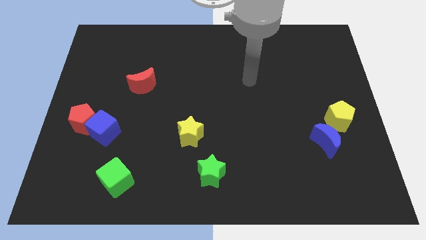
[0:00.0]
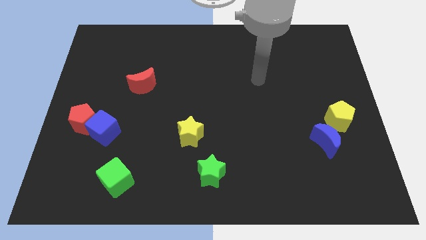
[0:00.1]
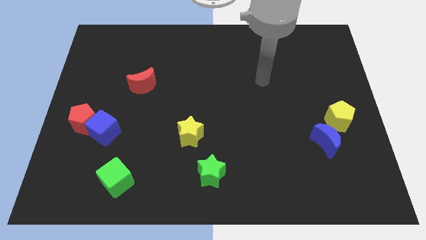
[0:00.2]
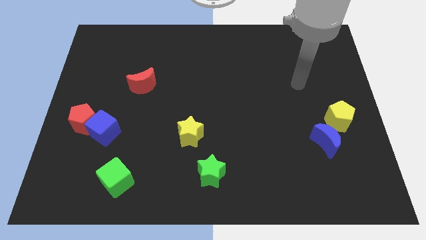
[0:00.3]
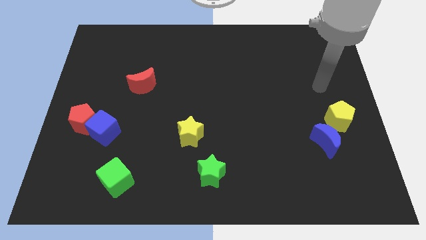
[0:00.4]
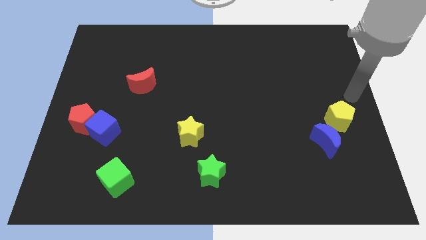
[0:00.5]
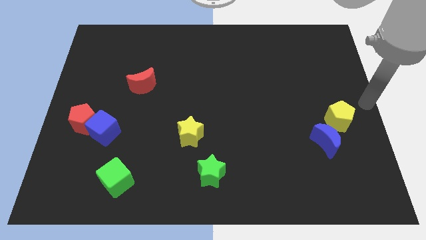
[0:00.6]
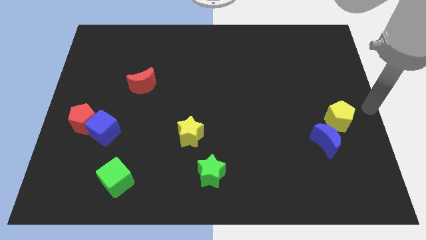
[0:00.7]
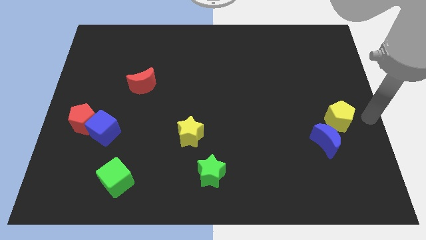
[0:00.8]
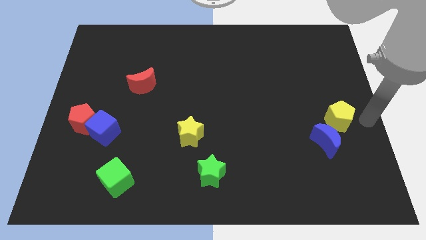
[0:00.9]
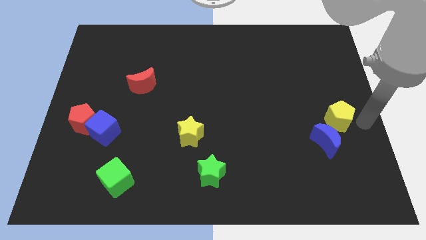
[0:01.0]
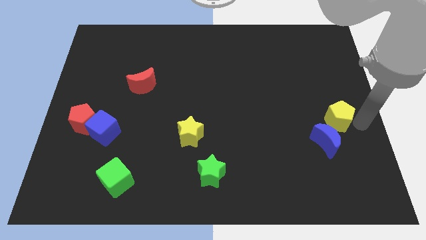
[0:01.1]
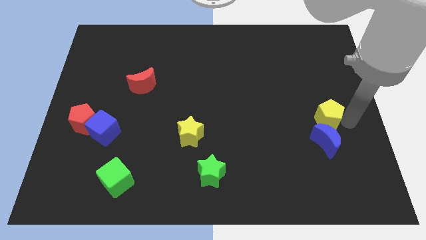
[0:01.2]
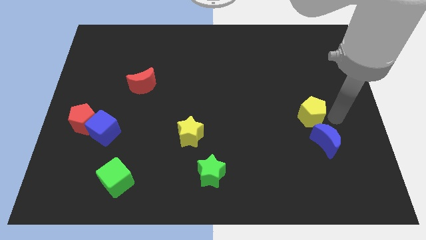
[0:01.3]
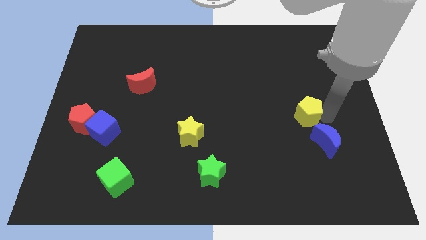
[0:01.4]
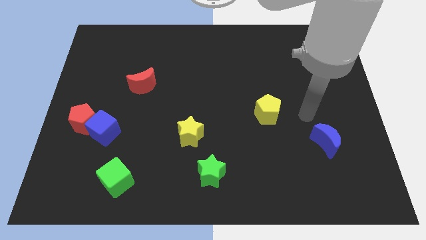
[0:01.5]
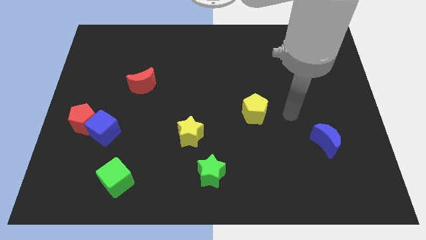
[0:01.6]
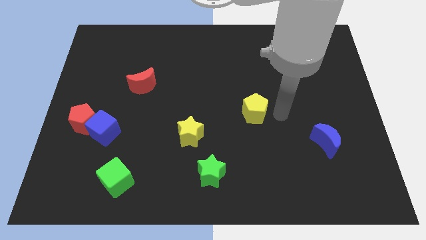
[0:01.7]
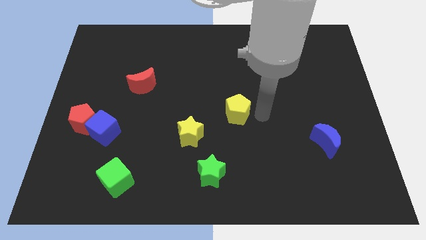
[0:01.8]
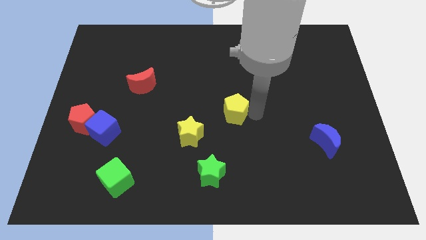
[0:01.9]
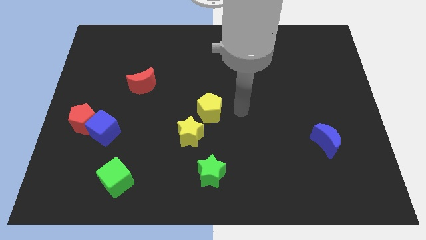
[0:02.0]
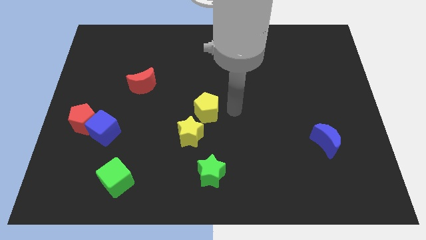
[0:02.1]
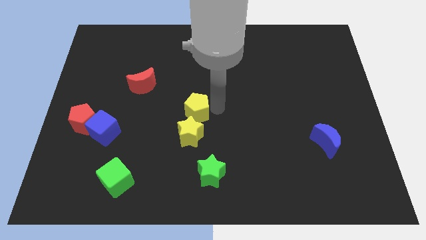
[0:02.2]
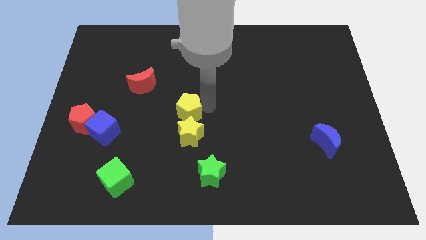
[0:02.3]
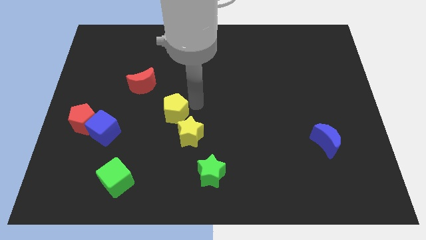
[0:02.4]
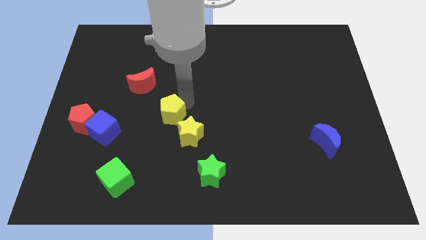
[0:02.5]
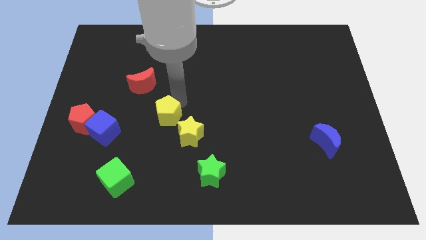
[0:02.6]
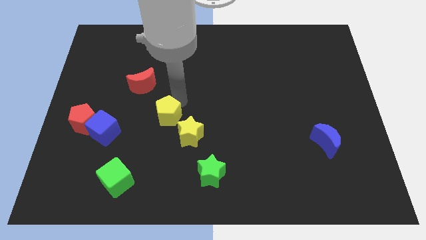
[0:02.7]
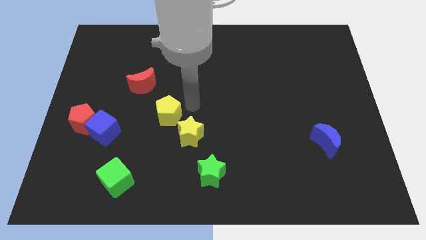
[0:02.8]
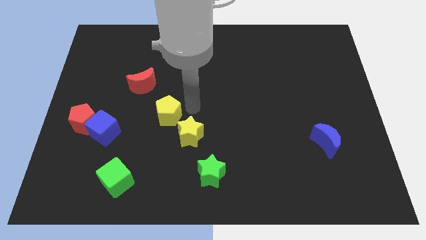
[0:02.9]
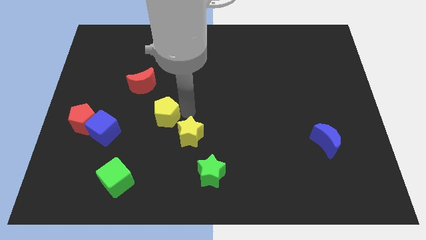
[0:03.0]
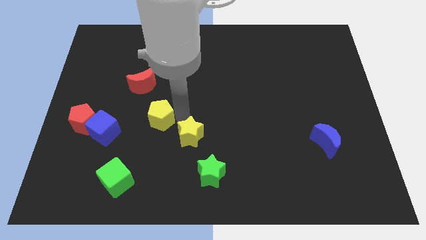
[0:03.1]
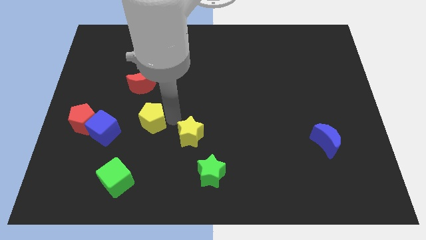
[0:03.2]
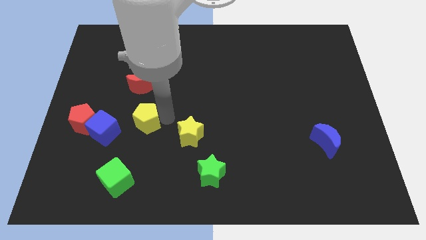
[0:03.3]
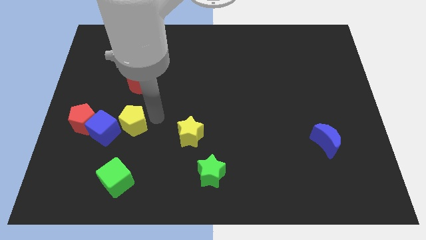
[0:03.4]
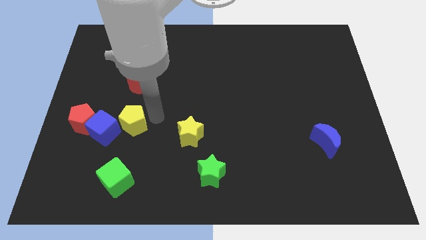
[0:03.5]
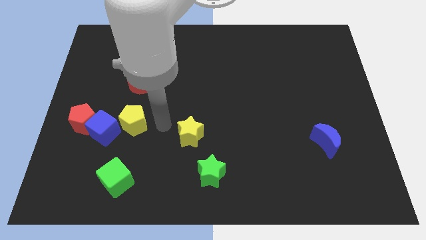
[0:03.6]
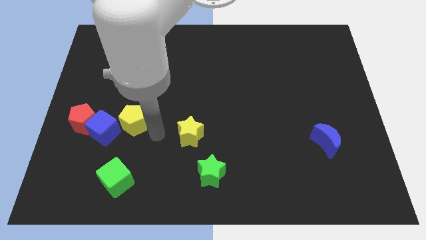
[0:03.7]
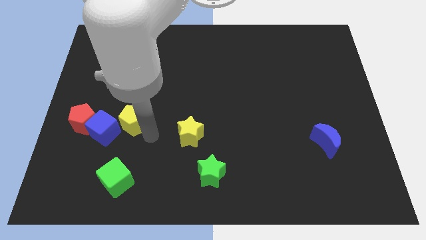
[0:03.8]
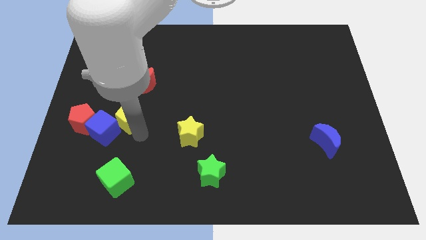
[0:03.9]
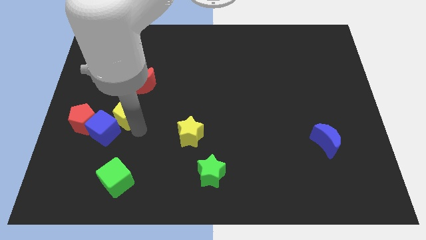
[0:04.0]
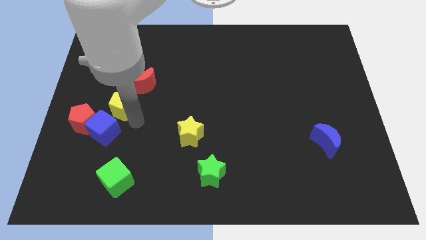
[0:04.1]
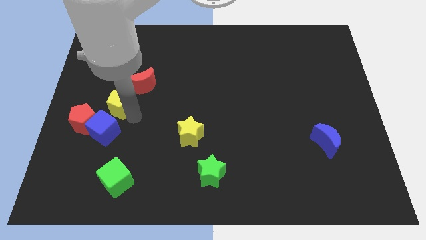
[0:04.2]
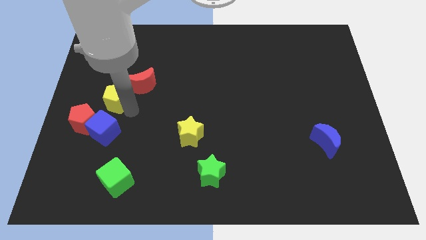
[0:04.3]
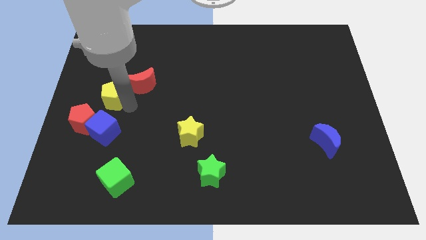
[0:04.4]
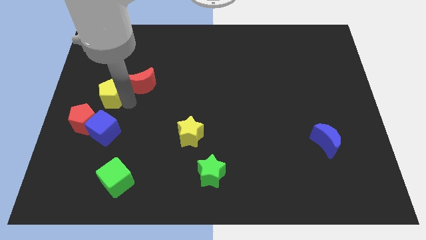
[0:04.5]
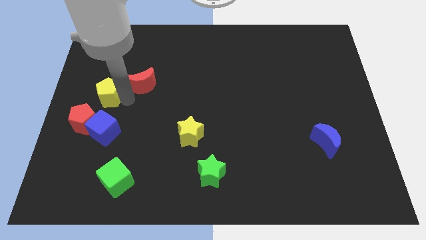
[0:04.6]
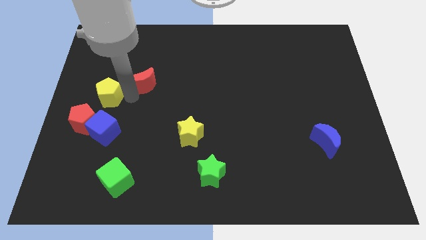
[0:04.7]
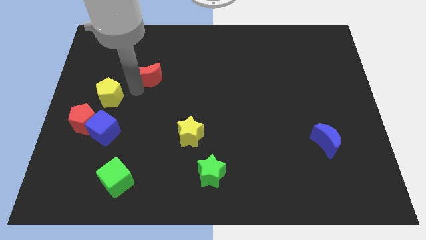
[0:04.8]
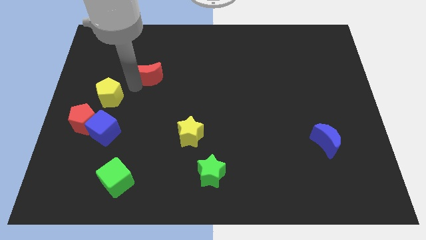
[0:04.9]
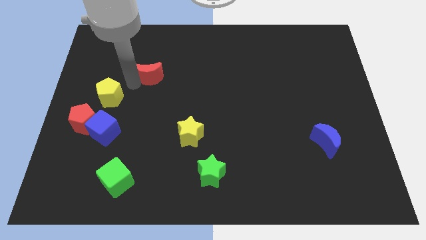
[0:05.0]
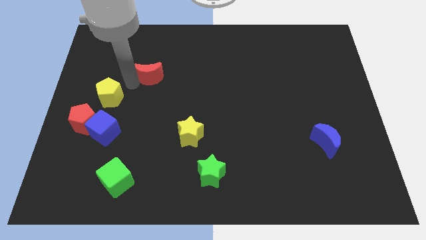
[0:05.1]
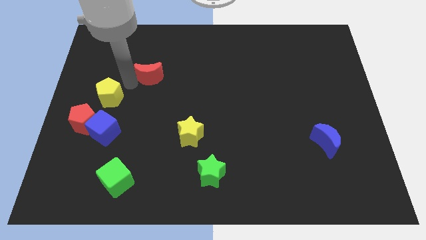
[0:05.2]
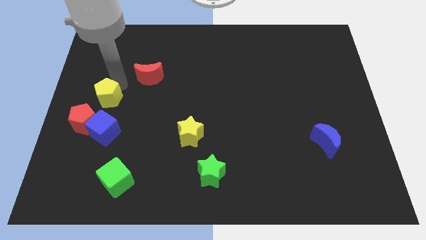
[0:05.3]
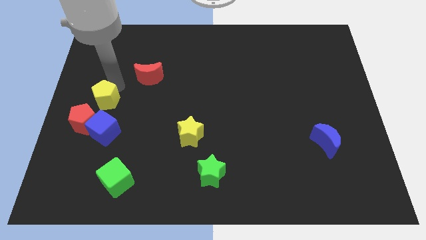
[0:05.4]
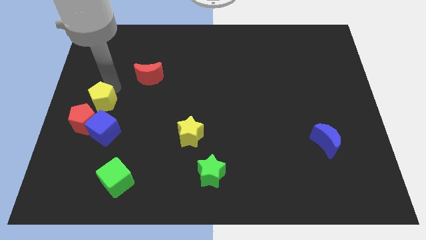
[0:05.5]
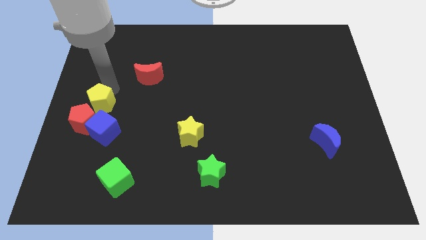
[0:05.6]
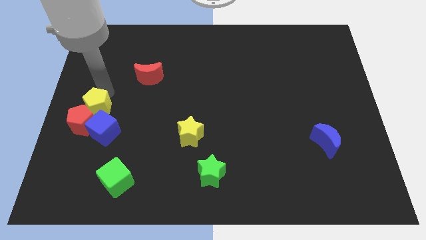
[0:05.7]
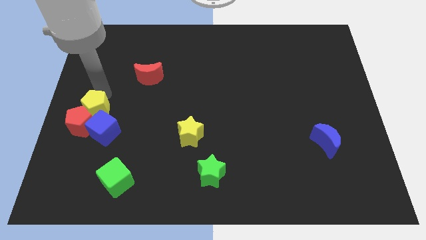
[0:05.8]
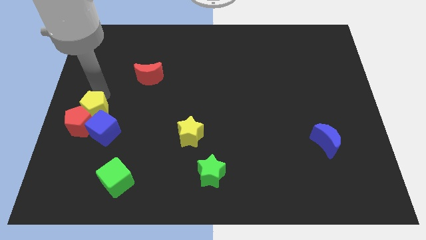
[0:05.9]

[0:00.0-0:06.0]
slide the yellow pentagon to the red pentagon

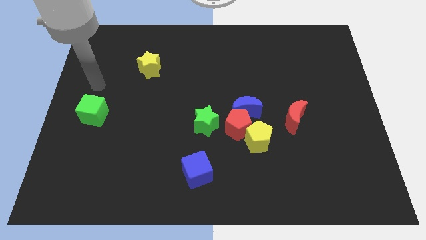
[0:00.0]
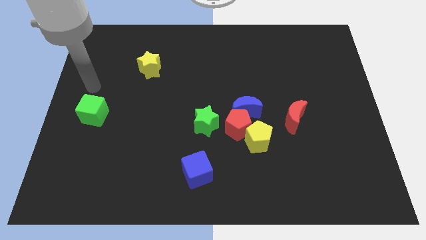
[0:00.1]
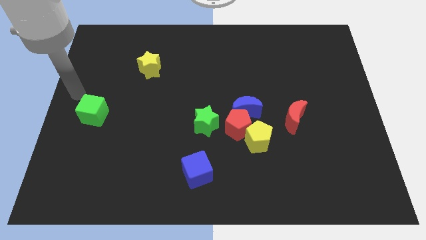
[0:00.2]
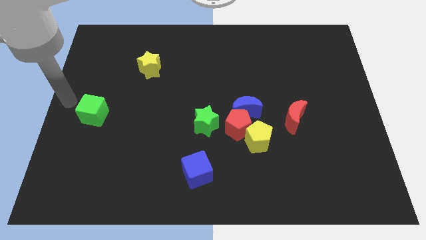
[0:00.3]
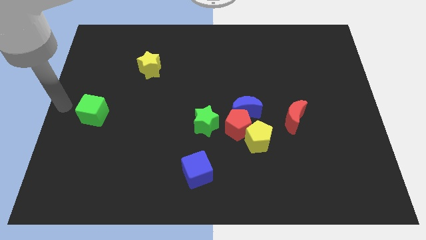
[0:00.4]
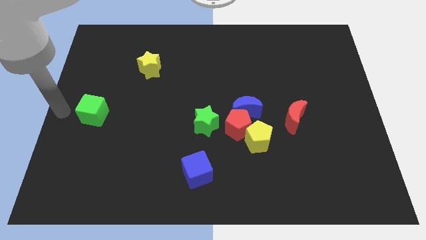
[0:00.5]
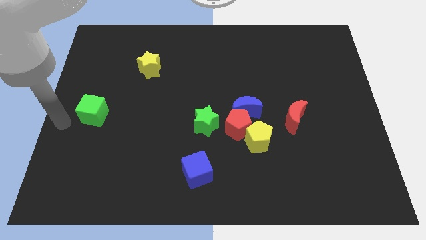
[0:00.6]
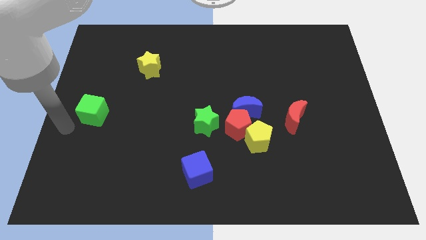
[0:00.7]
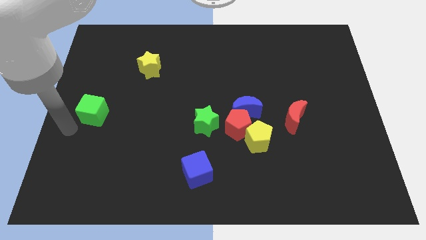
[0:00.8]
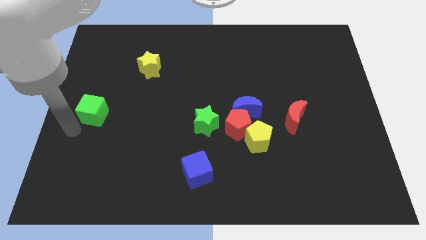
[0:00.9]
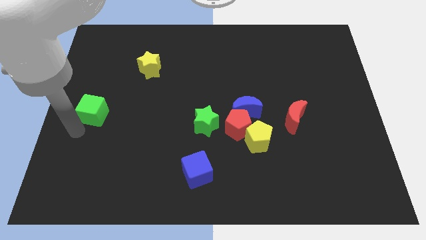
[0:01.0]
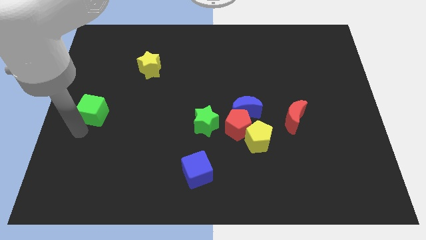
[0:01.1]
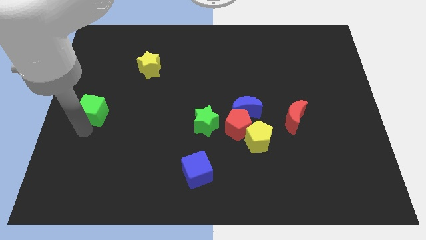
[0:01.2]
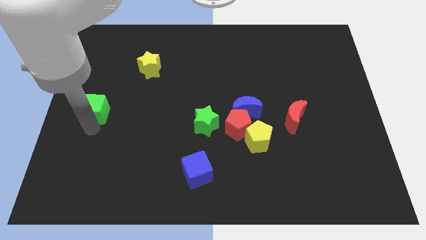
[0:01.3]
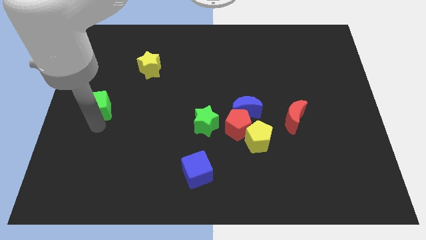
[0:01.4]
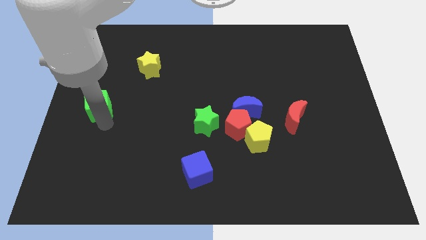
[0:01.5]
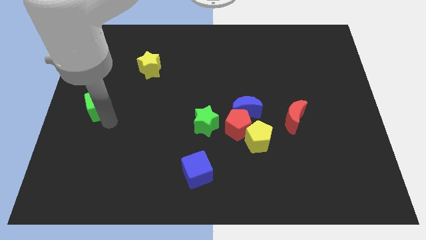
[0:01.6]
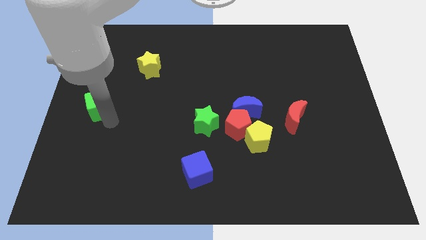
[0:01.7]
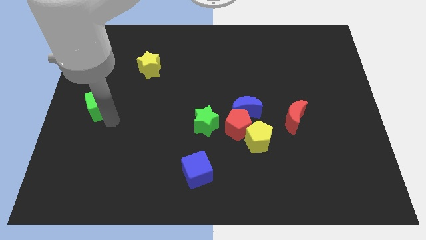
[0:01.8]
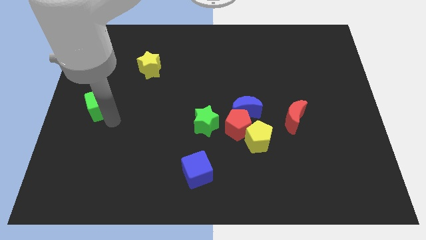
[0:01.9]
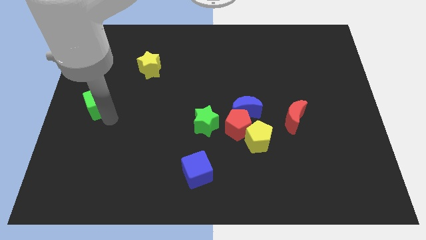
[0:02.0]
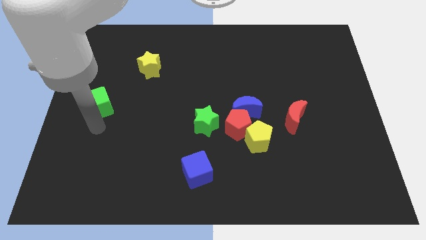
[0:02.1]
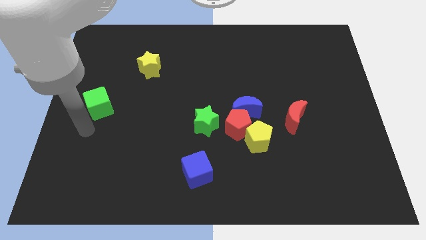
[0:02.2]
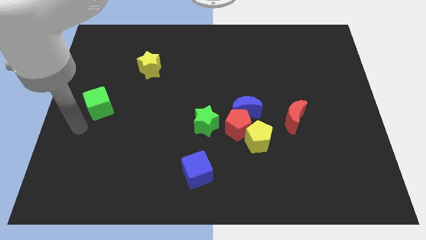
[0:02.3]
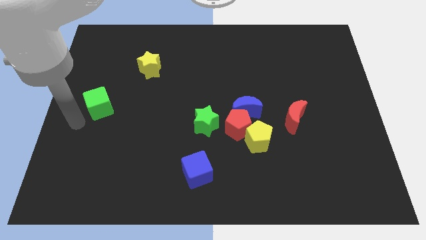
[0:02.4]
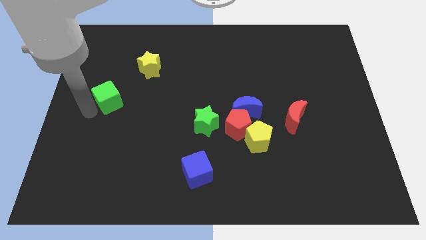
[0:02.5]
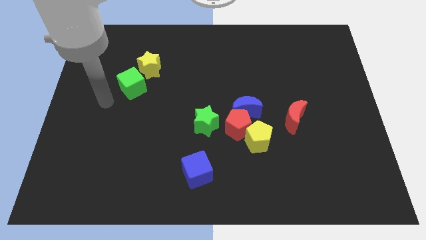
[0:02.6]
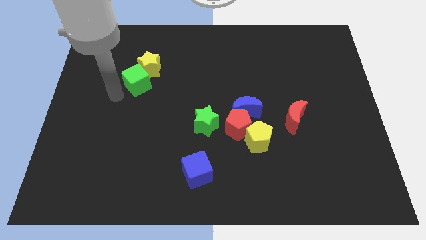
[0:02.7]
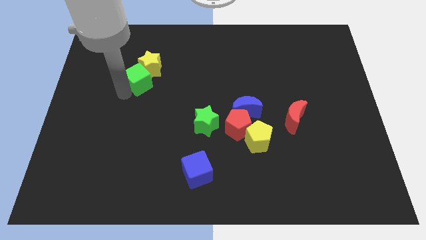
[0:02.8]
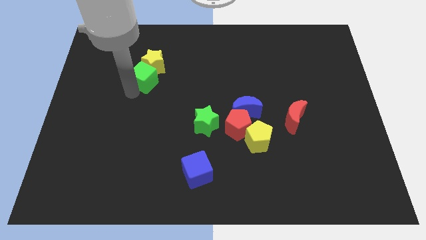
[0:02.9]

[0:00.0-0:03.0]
move the green cube next to the yellow star
